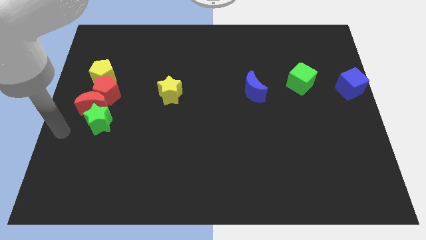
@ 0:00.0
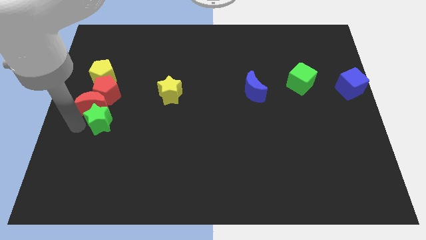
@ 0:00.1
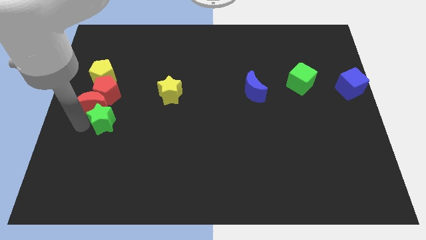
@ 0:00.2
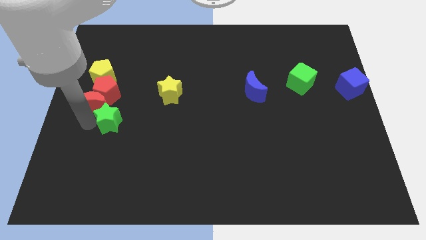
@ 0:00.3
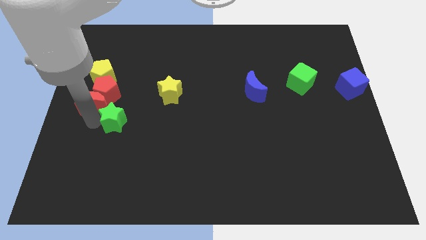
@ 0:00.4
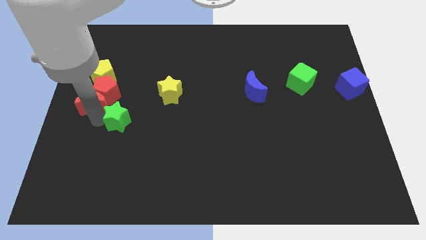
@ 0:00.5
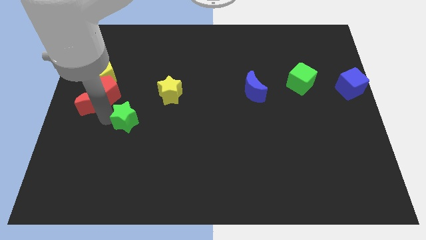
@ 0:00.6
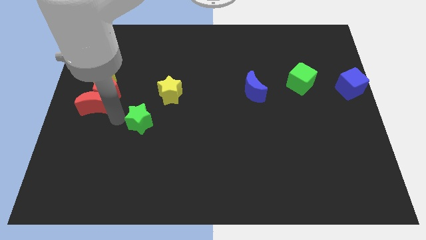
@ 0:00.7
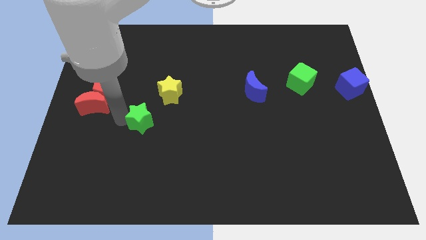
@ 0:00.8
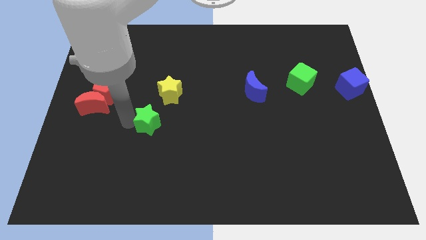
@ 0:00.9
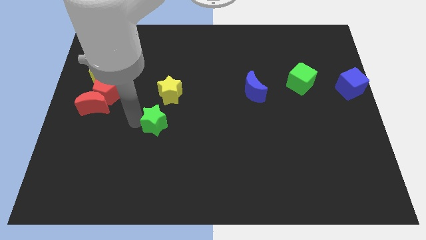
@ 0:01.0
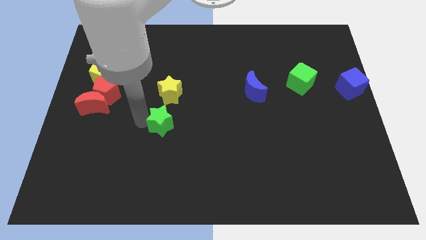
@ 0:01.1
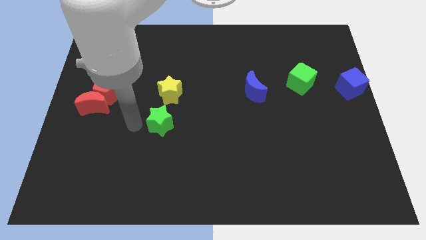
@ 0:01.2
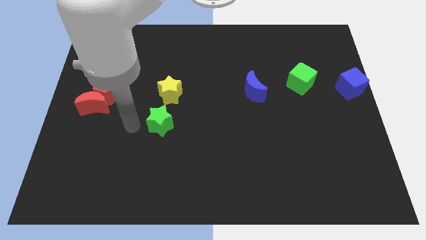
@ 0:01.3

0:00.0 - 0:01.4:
move green star to the bottom of yellow star

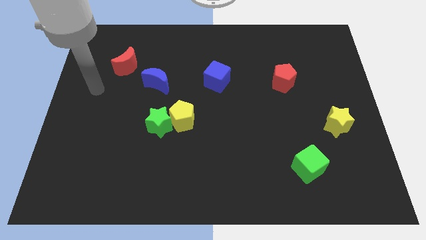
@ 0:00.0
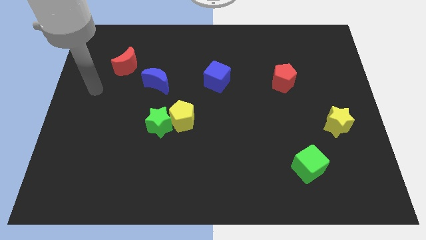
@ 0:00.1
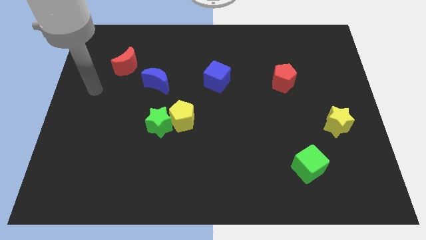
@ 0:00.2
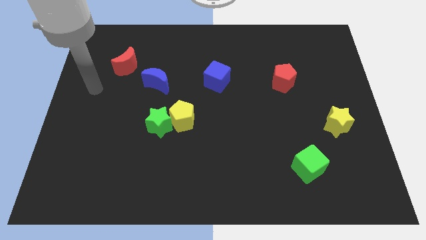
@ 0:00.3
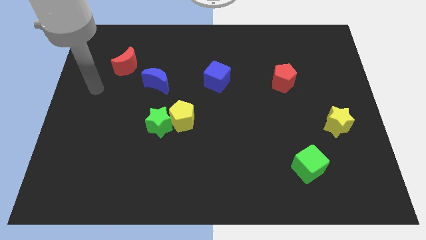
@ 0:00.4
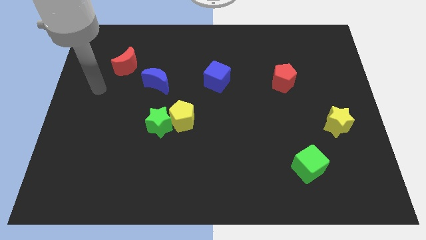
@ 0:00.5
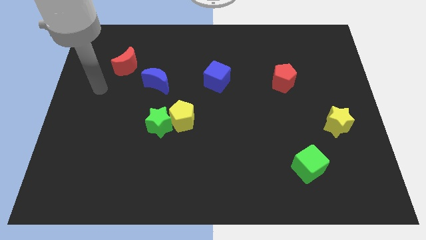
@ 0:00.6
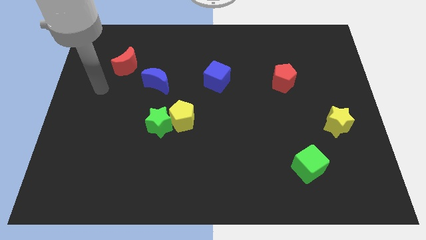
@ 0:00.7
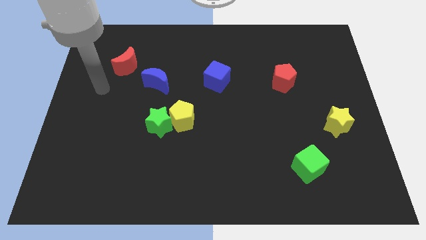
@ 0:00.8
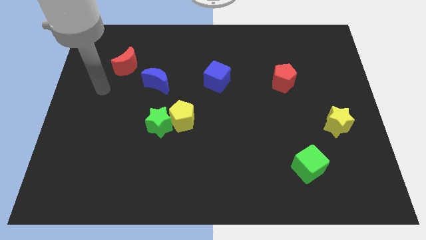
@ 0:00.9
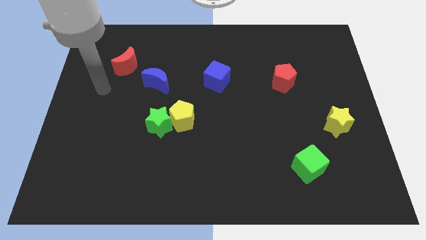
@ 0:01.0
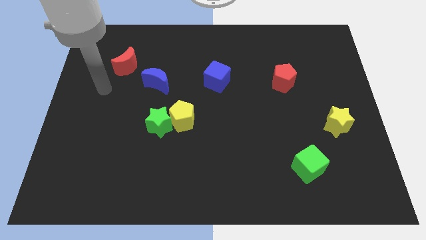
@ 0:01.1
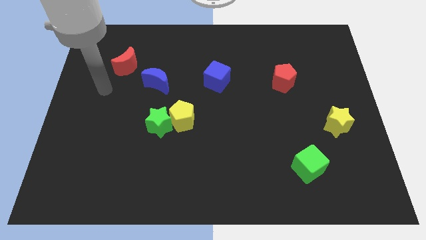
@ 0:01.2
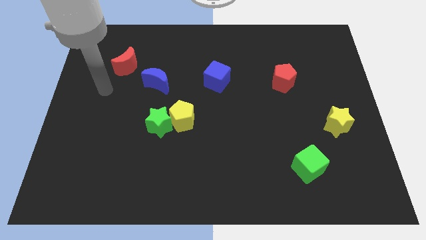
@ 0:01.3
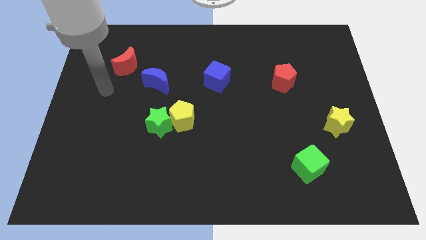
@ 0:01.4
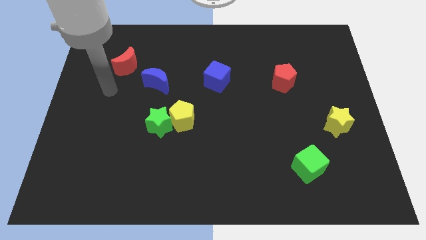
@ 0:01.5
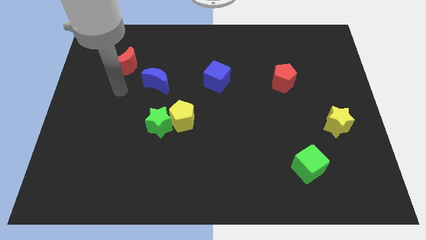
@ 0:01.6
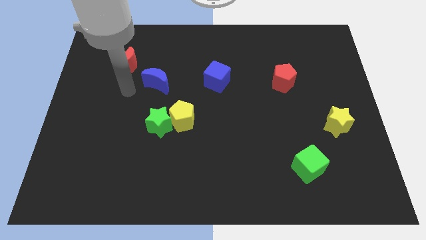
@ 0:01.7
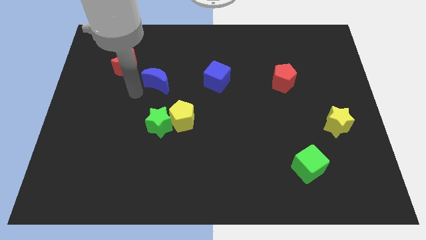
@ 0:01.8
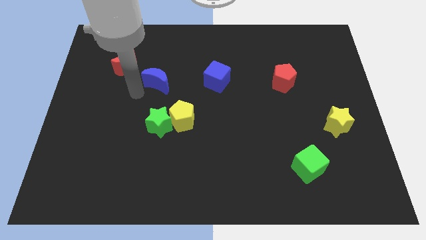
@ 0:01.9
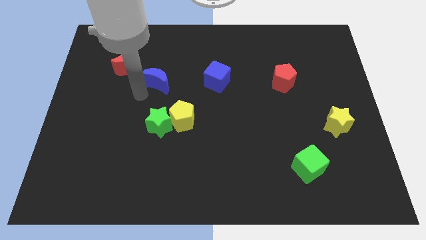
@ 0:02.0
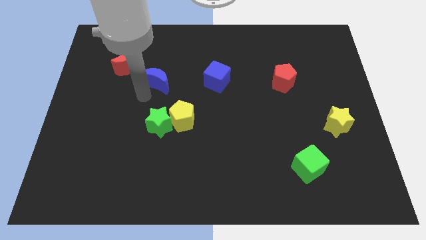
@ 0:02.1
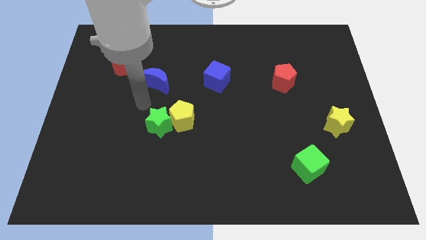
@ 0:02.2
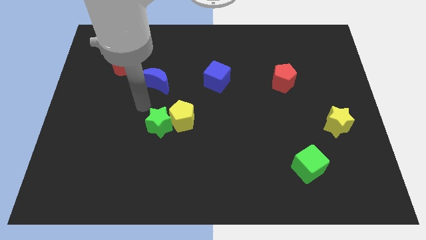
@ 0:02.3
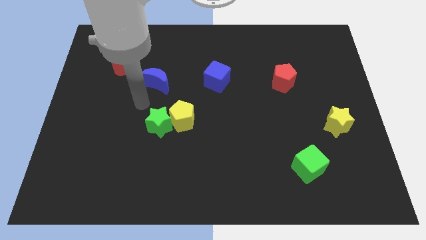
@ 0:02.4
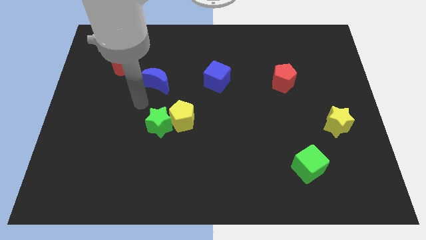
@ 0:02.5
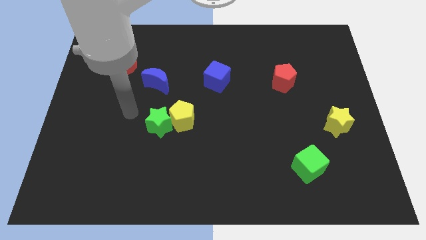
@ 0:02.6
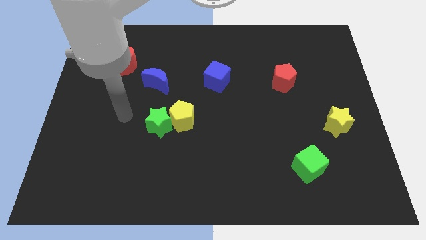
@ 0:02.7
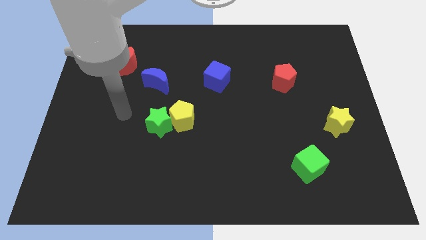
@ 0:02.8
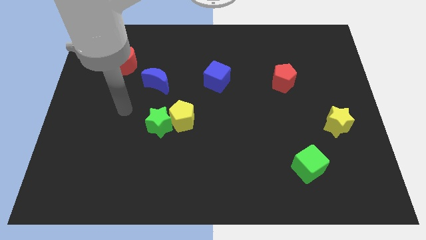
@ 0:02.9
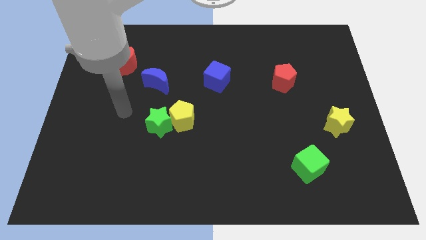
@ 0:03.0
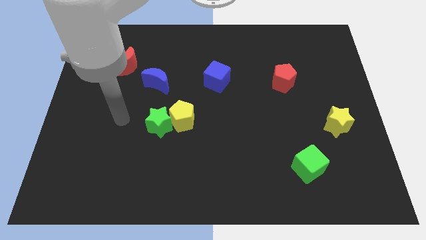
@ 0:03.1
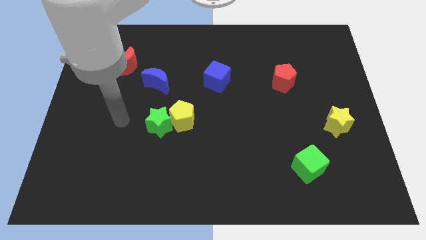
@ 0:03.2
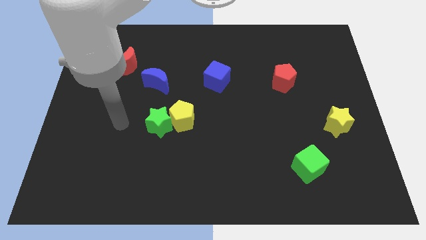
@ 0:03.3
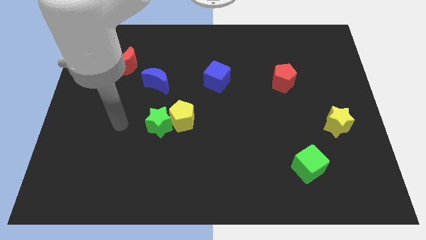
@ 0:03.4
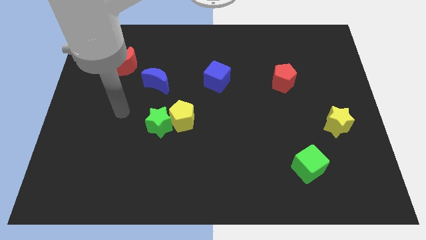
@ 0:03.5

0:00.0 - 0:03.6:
move the arm towards the left to green star

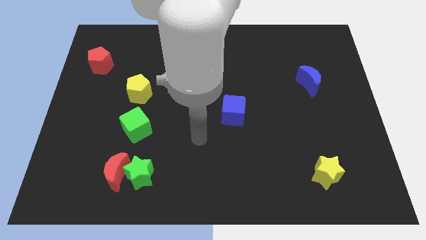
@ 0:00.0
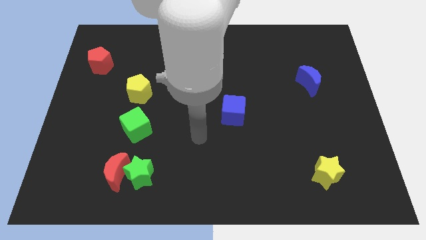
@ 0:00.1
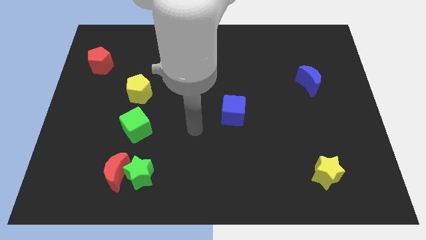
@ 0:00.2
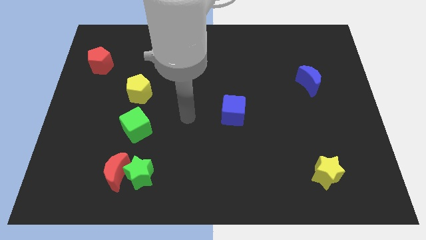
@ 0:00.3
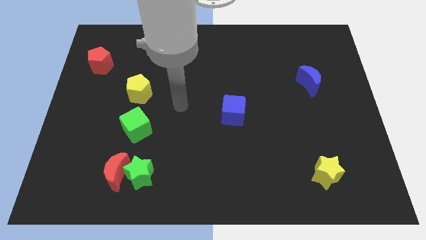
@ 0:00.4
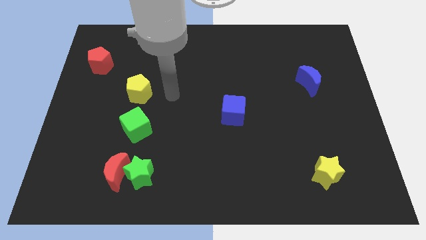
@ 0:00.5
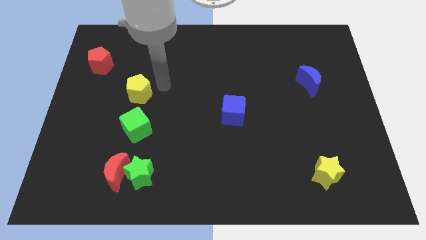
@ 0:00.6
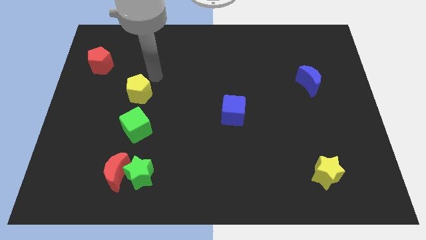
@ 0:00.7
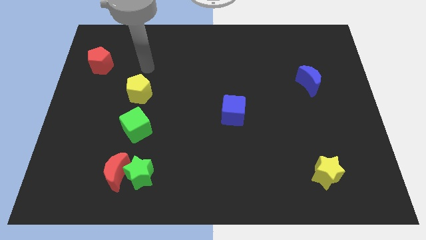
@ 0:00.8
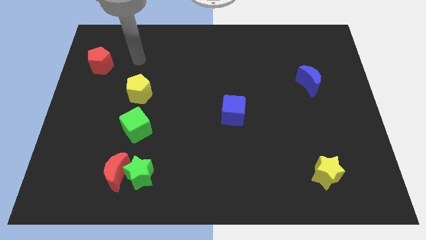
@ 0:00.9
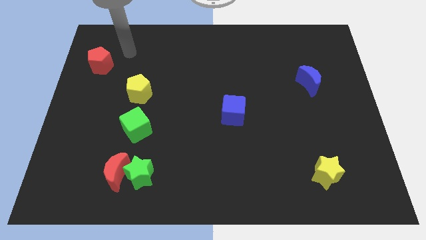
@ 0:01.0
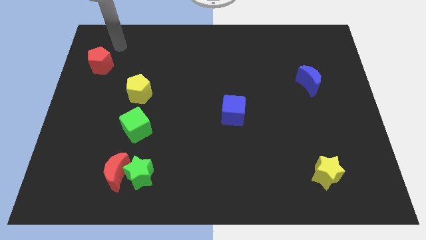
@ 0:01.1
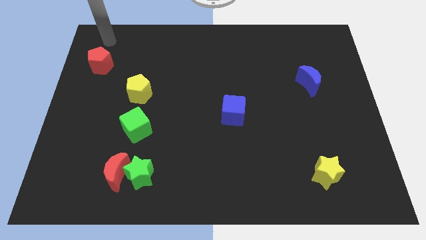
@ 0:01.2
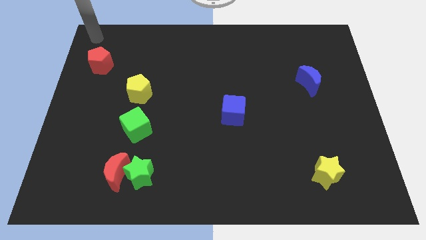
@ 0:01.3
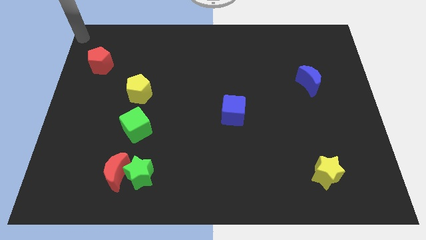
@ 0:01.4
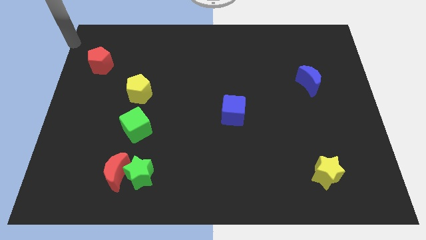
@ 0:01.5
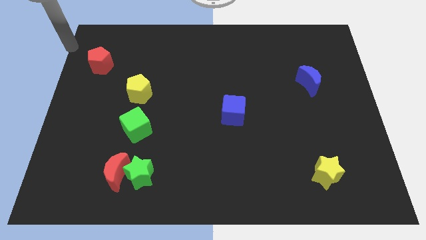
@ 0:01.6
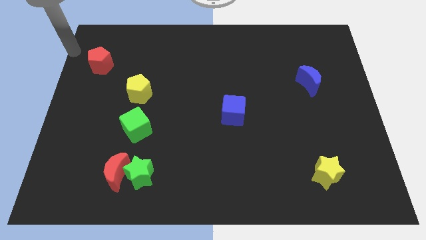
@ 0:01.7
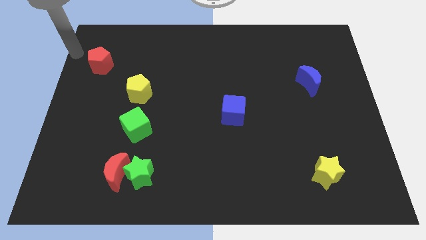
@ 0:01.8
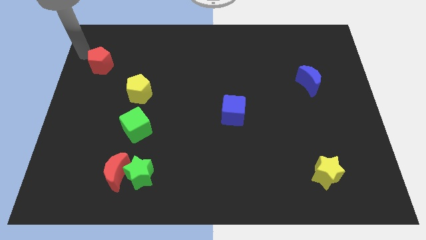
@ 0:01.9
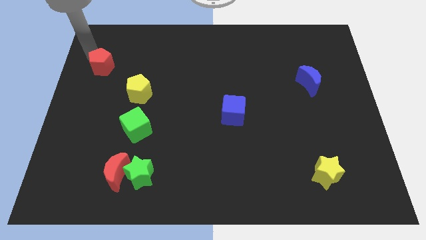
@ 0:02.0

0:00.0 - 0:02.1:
tap the red pentagon

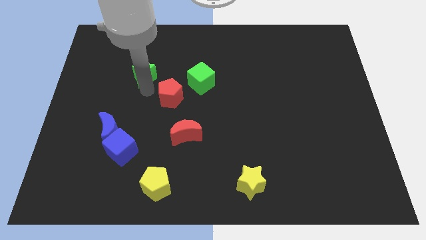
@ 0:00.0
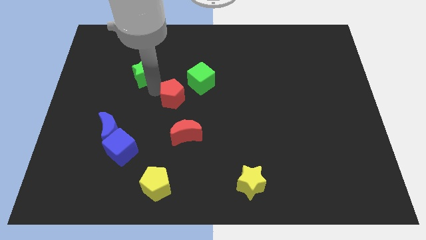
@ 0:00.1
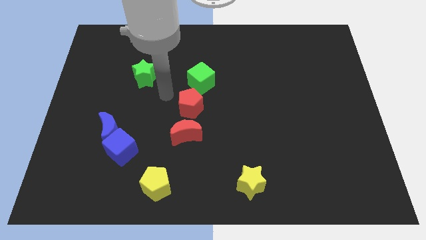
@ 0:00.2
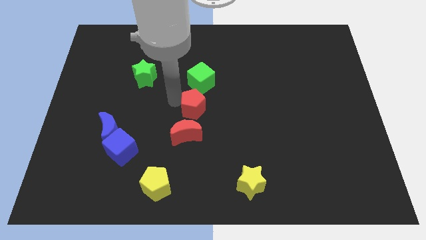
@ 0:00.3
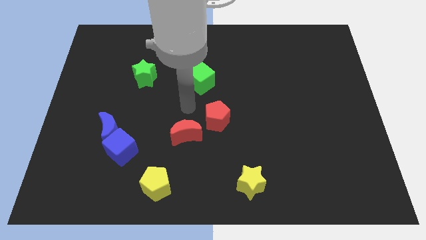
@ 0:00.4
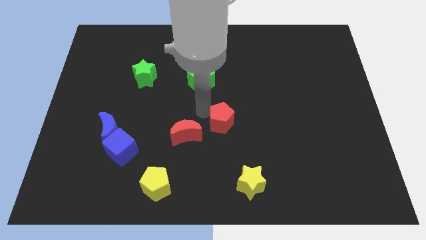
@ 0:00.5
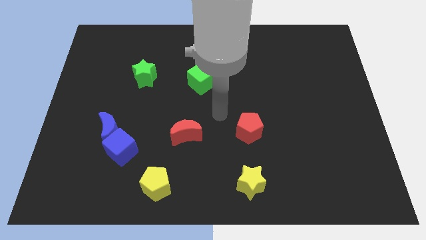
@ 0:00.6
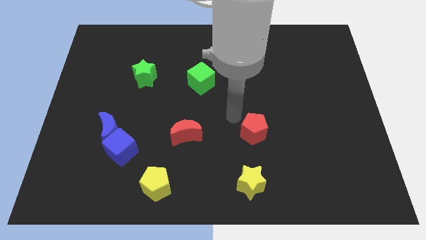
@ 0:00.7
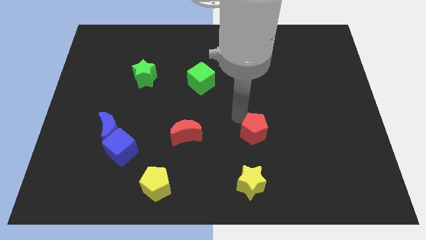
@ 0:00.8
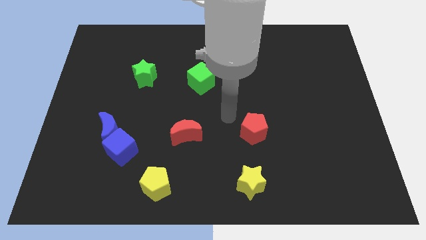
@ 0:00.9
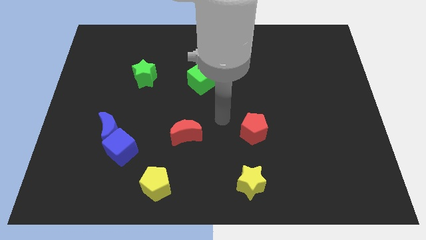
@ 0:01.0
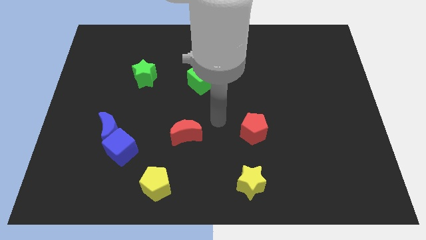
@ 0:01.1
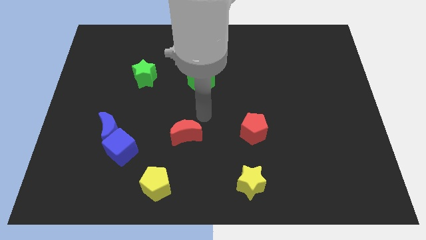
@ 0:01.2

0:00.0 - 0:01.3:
push the red pentagon diagonally bottom right to the green cube

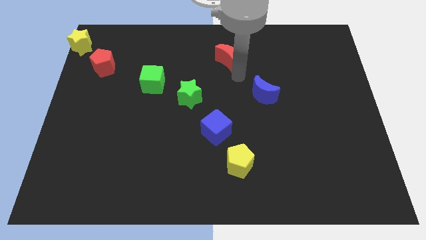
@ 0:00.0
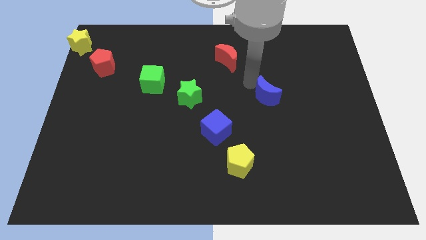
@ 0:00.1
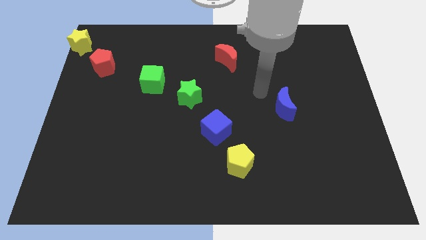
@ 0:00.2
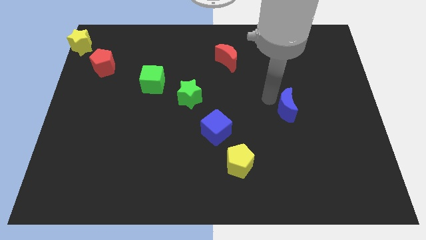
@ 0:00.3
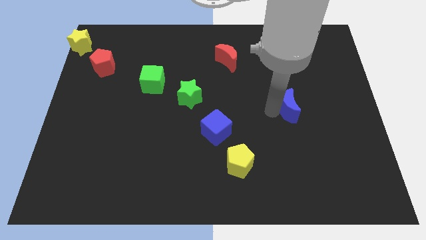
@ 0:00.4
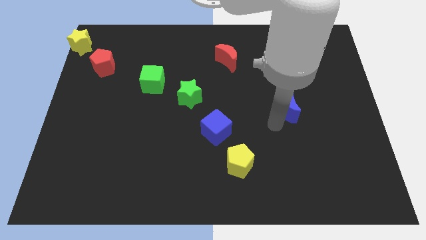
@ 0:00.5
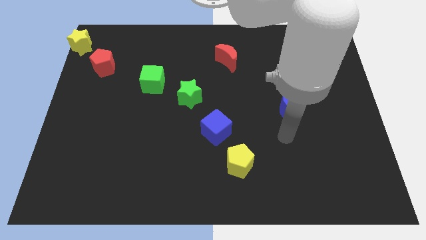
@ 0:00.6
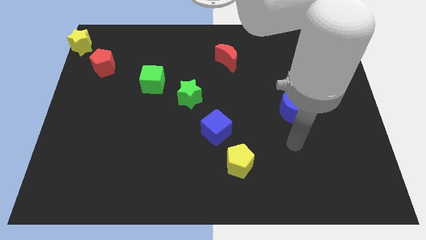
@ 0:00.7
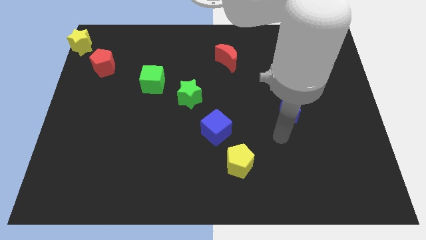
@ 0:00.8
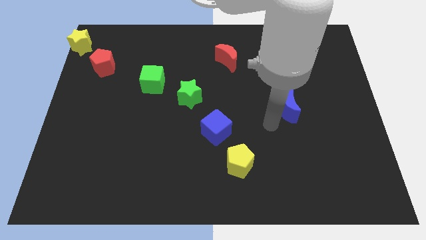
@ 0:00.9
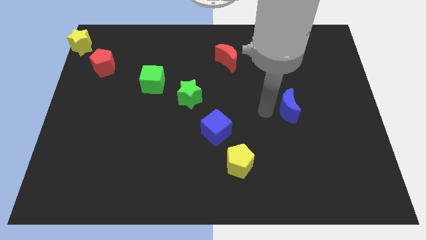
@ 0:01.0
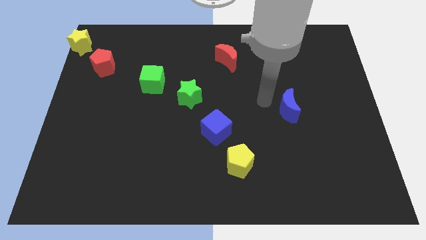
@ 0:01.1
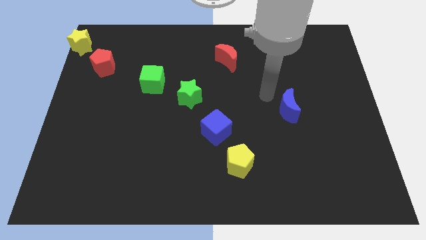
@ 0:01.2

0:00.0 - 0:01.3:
push the blue moon diagonally to the top right side of the yellow pentagon
